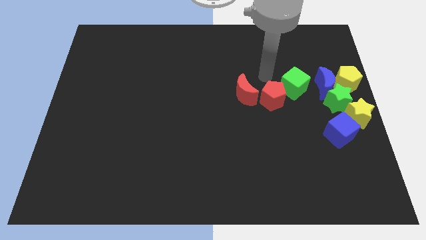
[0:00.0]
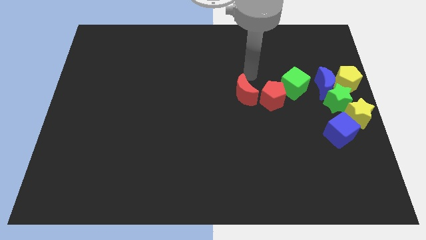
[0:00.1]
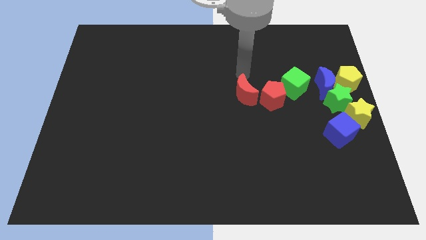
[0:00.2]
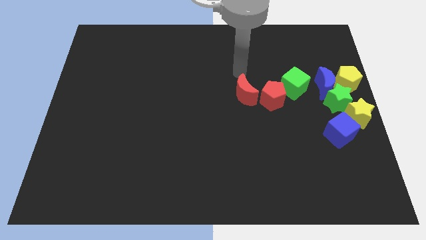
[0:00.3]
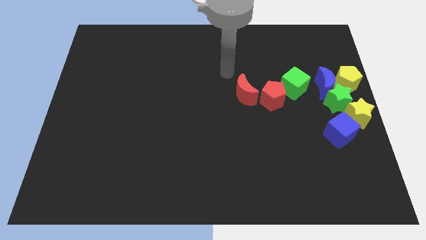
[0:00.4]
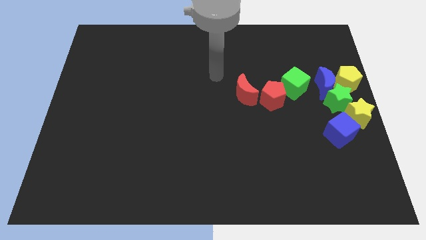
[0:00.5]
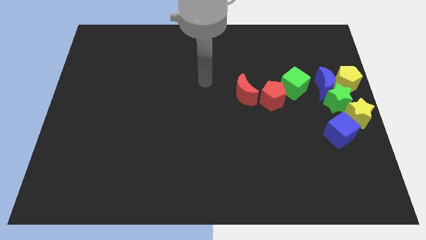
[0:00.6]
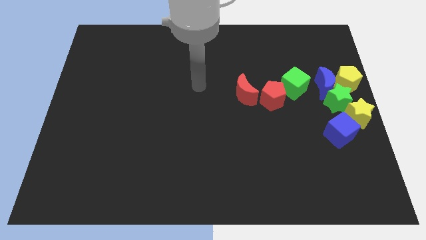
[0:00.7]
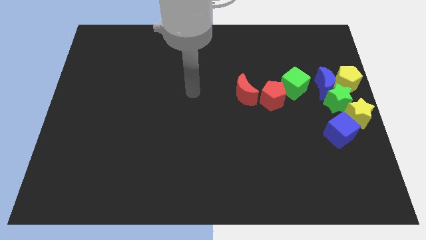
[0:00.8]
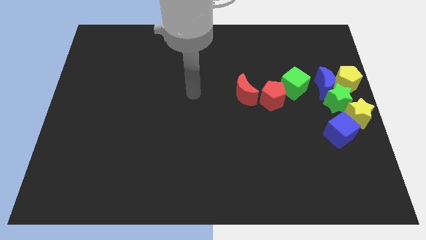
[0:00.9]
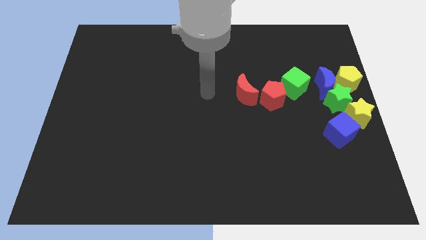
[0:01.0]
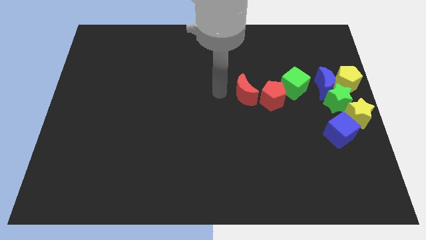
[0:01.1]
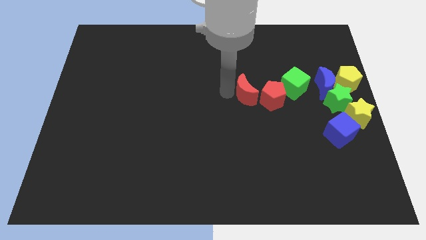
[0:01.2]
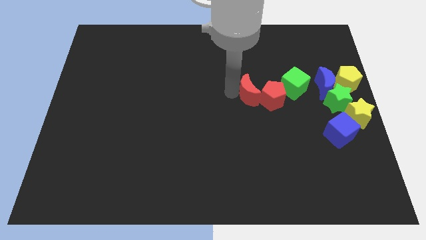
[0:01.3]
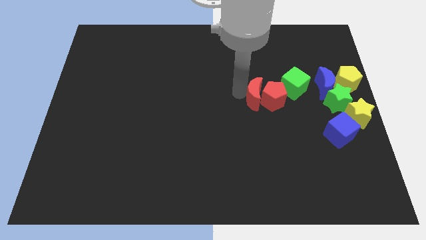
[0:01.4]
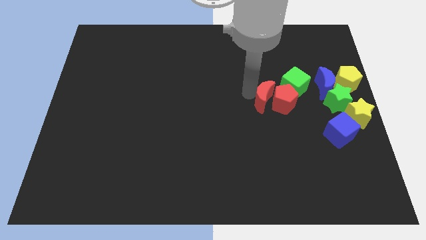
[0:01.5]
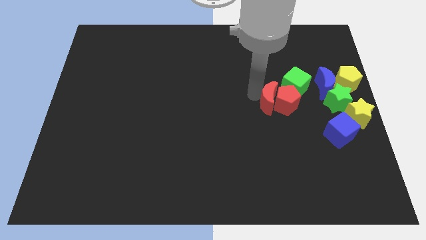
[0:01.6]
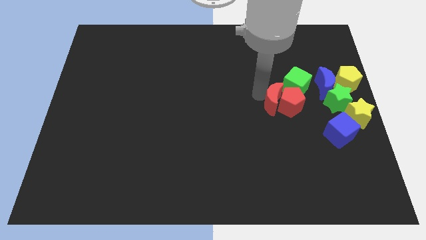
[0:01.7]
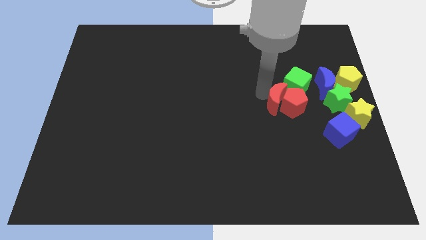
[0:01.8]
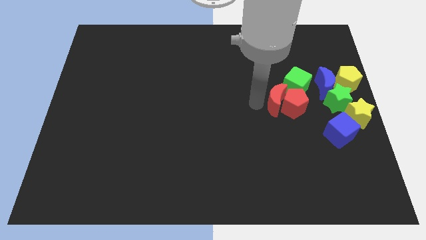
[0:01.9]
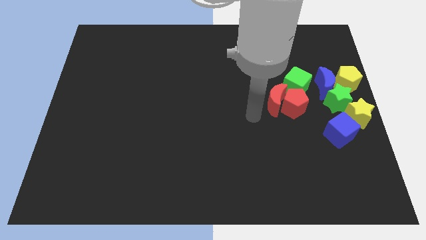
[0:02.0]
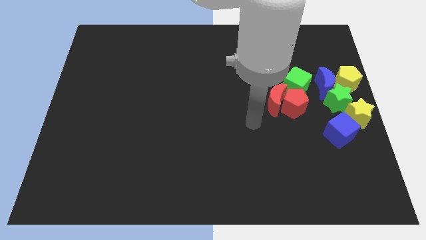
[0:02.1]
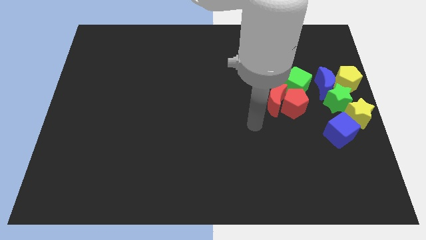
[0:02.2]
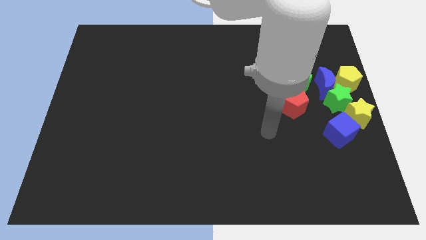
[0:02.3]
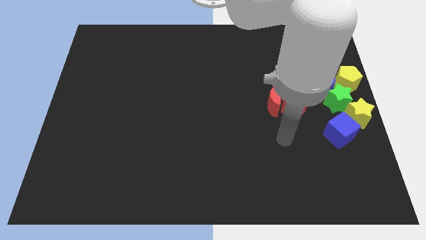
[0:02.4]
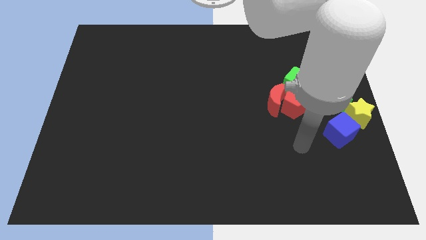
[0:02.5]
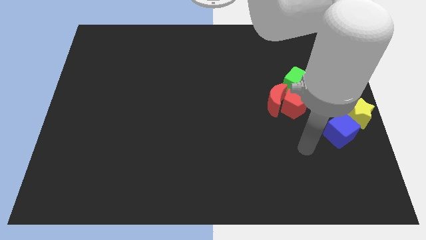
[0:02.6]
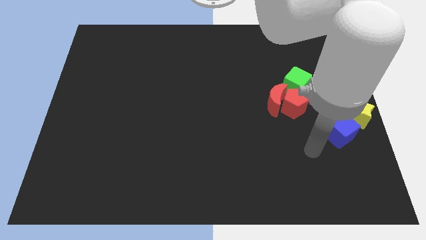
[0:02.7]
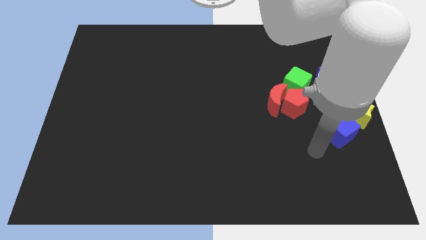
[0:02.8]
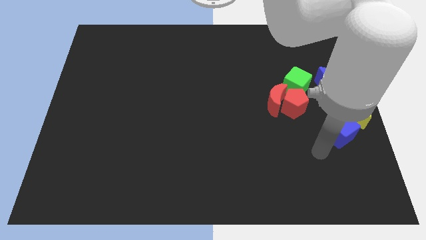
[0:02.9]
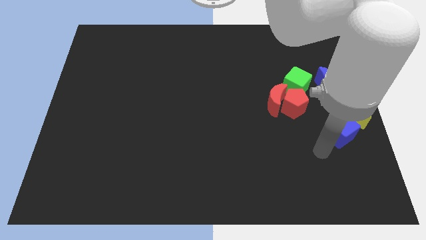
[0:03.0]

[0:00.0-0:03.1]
move the red crescent to the left of the red pentagon

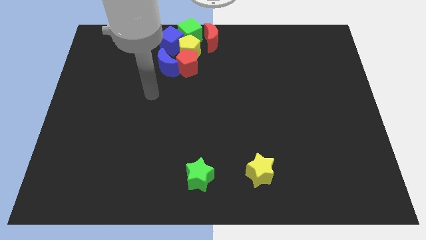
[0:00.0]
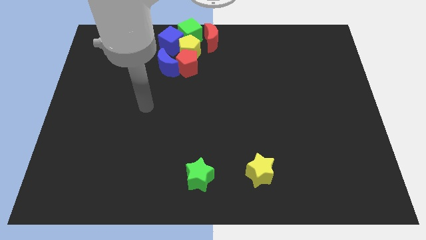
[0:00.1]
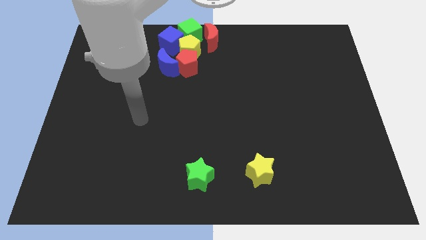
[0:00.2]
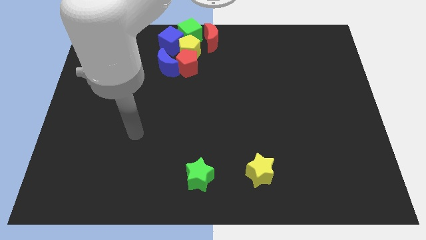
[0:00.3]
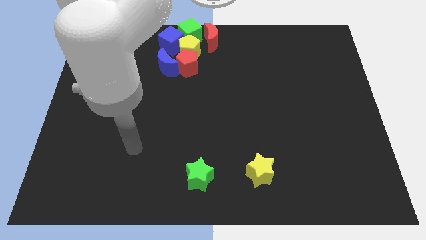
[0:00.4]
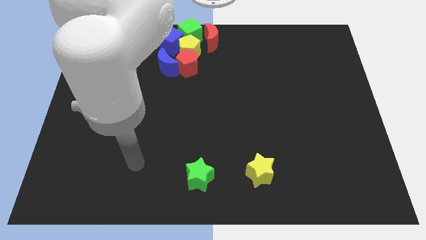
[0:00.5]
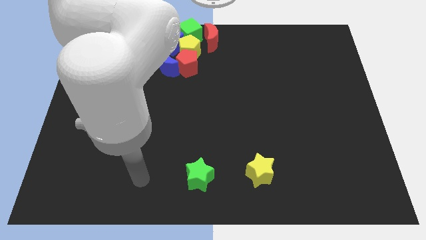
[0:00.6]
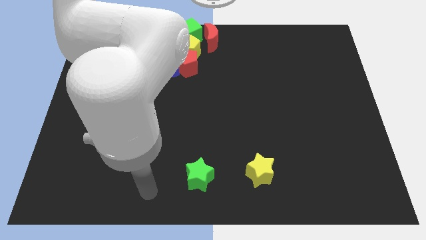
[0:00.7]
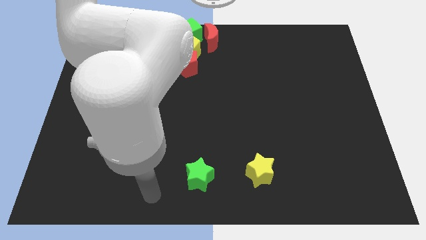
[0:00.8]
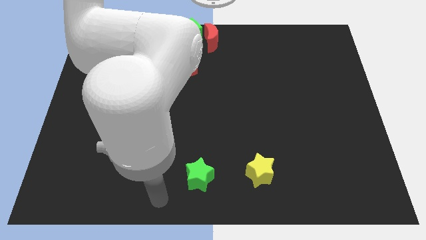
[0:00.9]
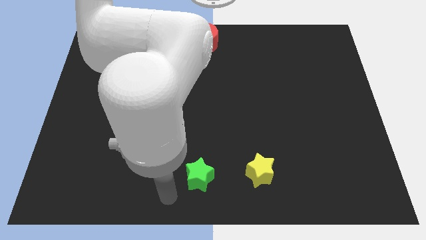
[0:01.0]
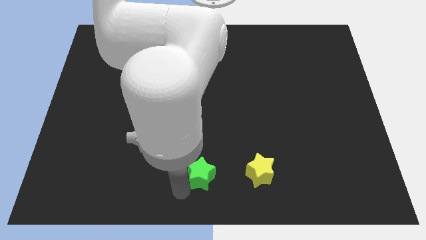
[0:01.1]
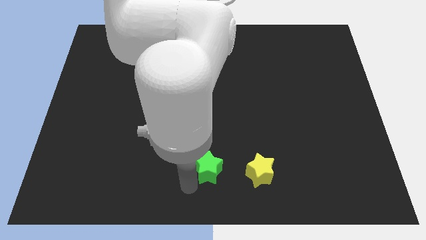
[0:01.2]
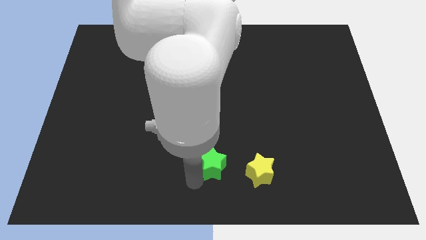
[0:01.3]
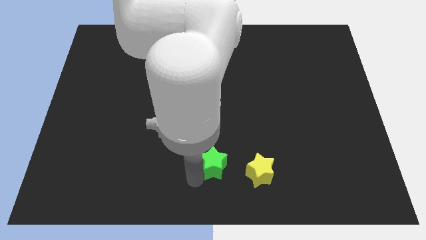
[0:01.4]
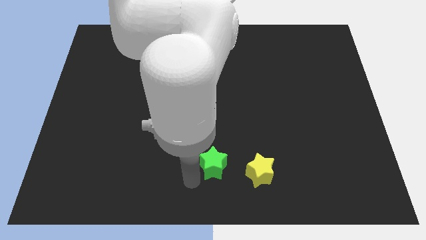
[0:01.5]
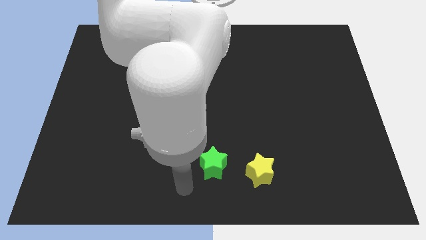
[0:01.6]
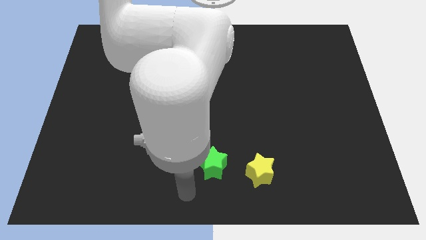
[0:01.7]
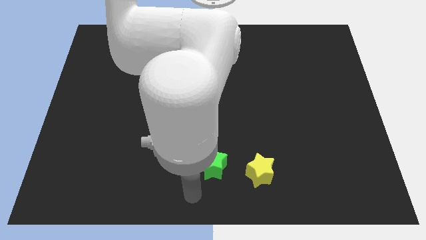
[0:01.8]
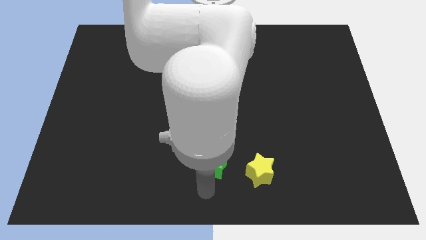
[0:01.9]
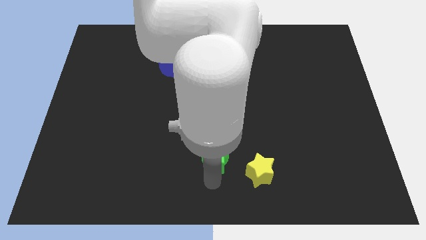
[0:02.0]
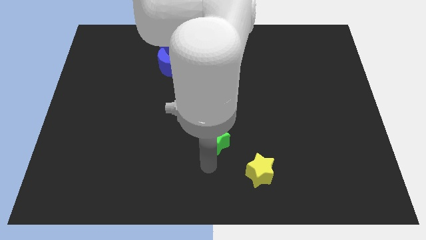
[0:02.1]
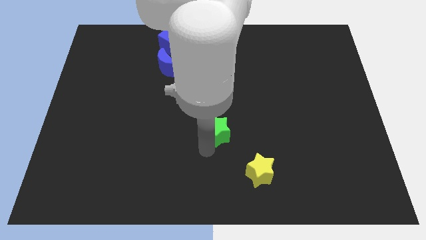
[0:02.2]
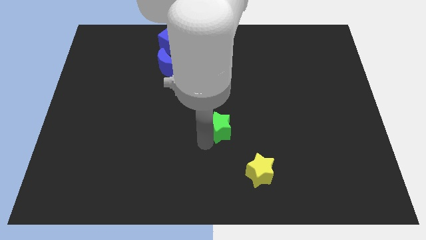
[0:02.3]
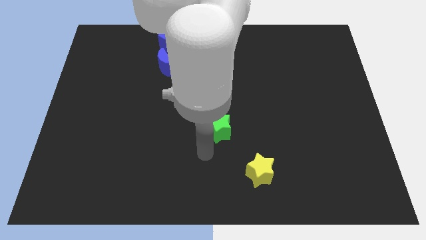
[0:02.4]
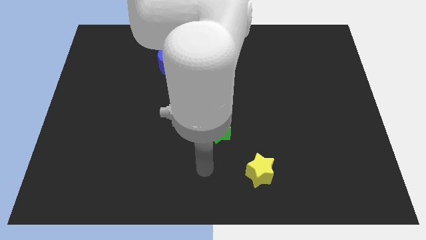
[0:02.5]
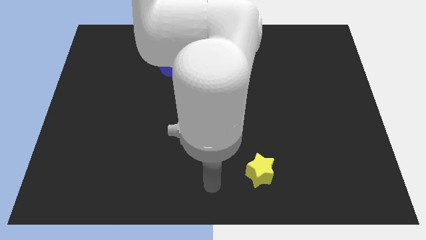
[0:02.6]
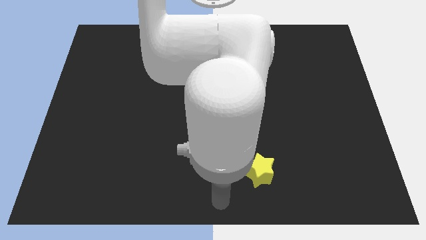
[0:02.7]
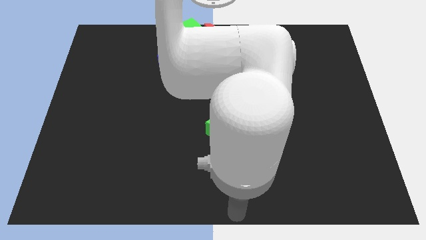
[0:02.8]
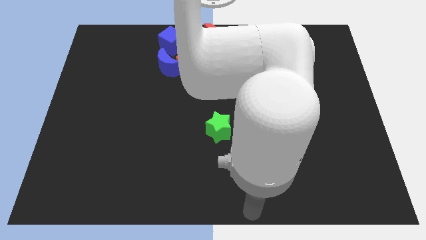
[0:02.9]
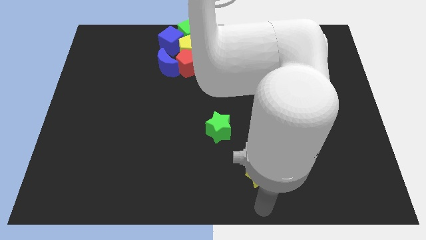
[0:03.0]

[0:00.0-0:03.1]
slightly push the green star towards the center of the board

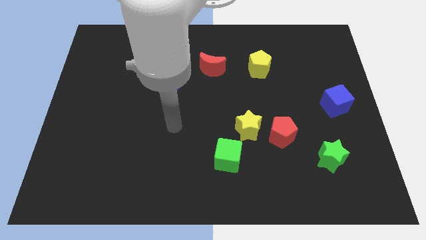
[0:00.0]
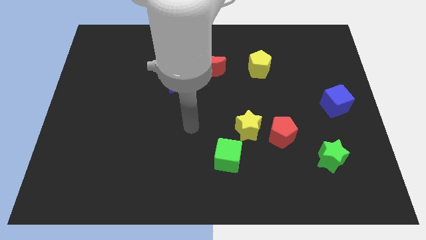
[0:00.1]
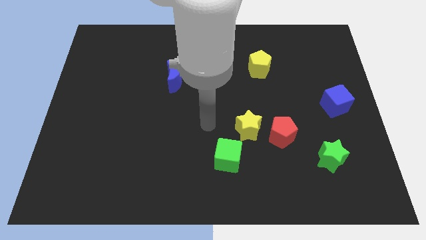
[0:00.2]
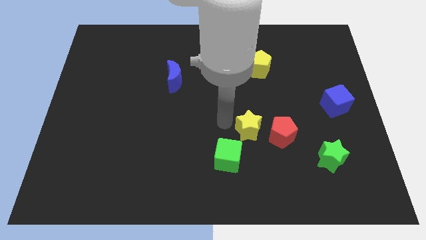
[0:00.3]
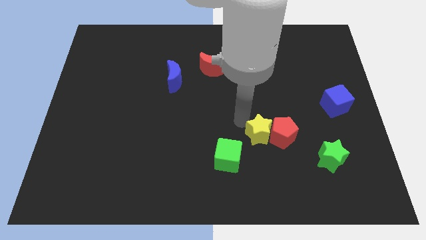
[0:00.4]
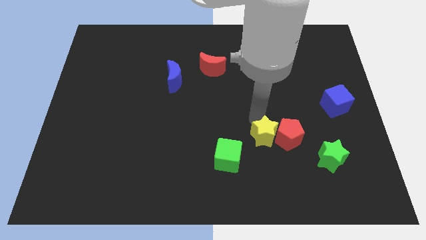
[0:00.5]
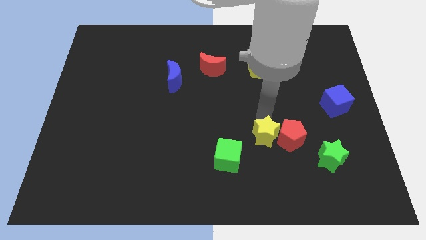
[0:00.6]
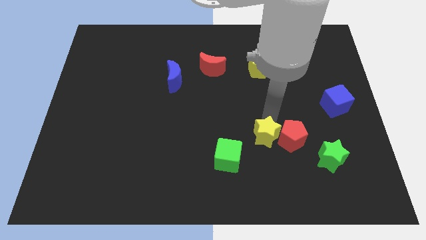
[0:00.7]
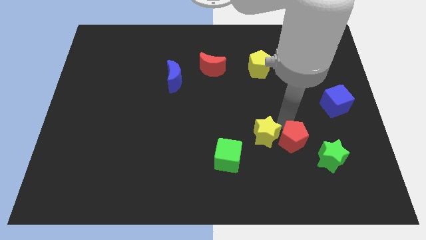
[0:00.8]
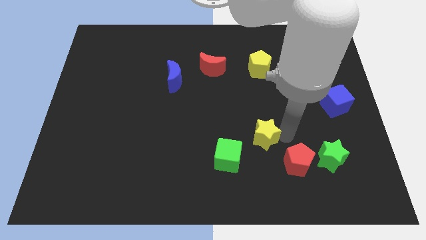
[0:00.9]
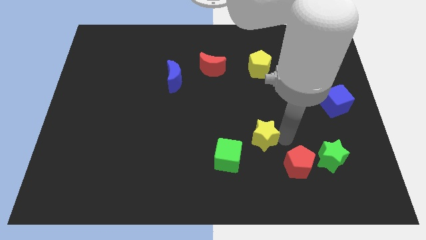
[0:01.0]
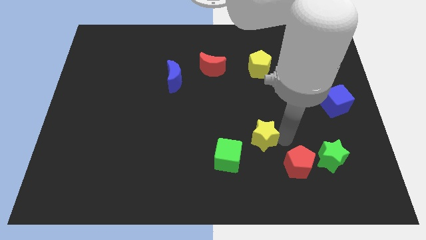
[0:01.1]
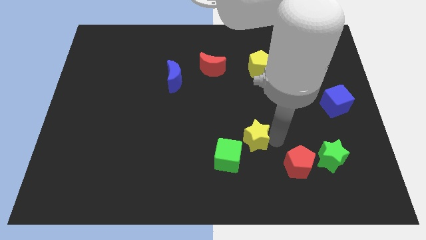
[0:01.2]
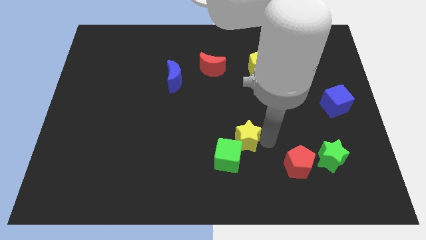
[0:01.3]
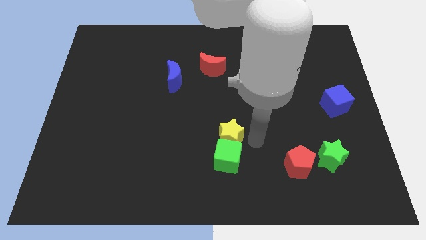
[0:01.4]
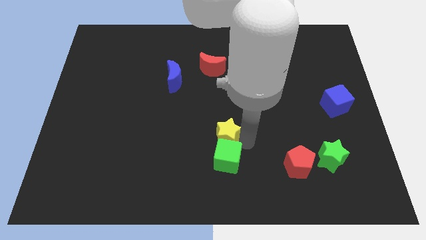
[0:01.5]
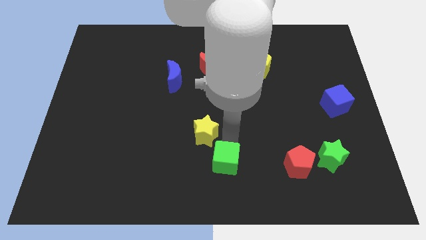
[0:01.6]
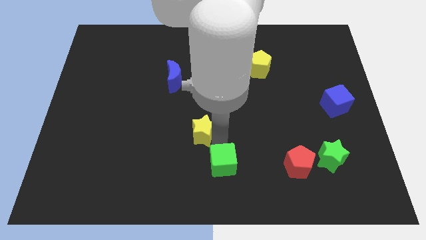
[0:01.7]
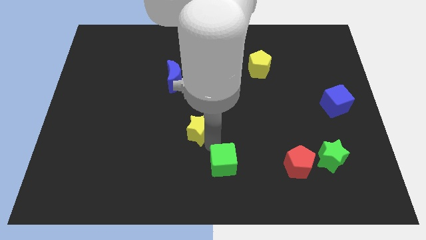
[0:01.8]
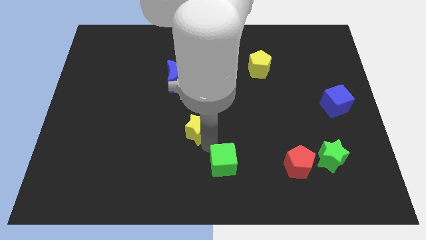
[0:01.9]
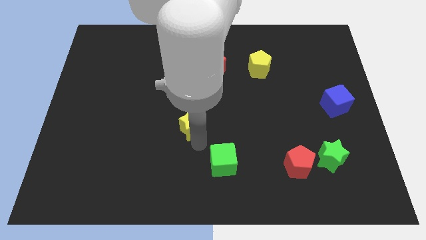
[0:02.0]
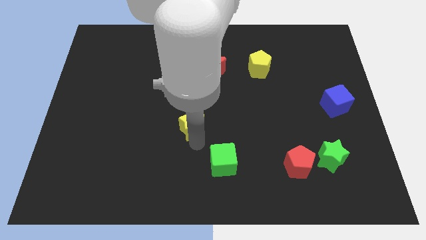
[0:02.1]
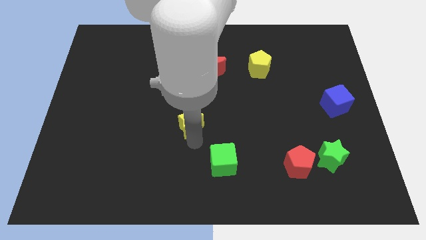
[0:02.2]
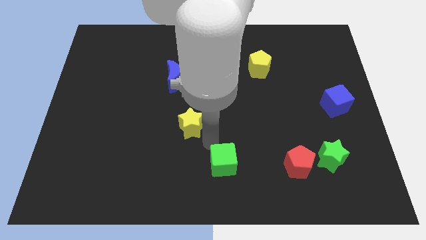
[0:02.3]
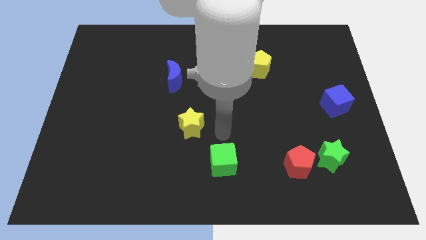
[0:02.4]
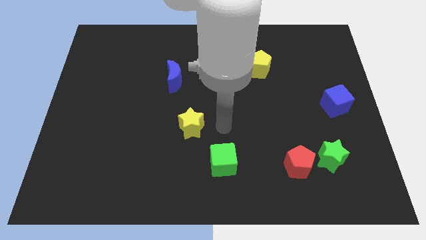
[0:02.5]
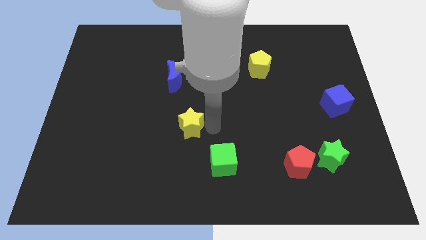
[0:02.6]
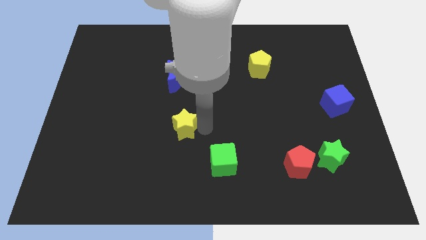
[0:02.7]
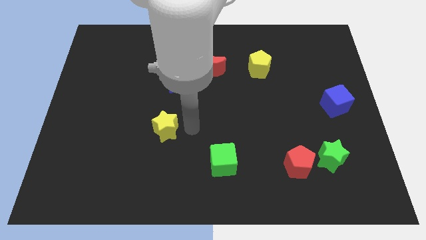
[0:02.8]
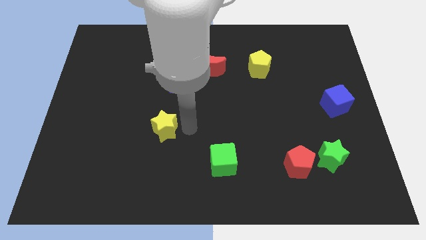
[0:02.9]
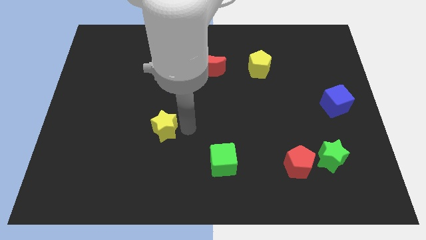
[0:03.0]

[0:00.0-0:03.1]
separate red pentagon and yellow star
